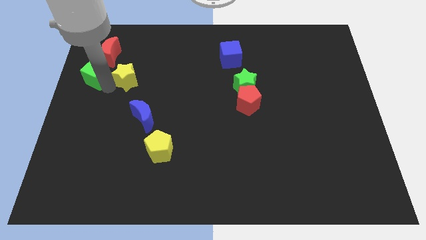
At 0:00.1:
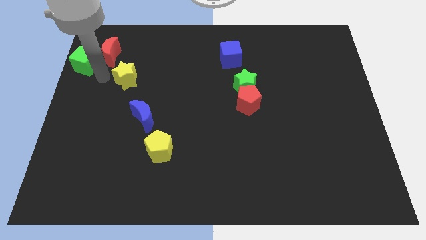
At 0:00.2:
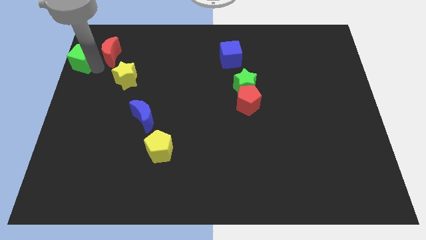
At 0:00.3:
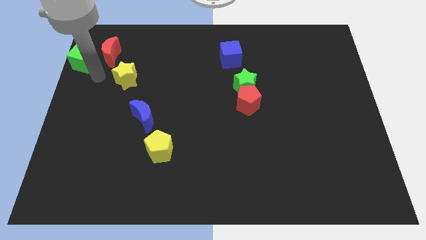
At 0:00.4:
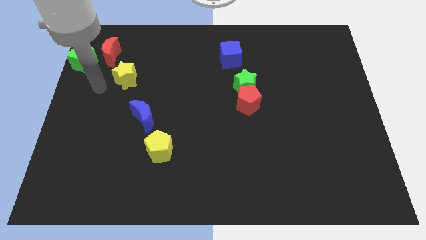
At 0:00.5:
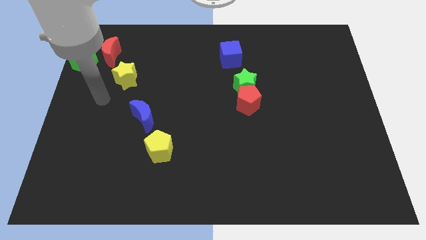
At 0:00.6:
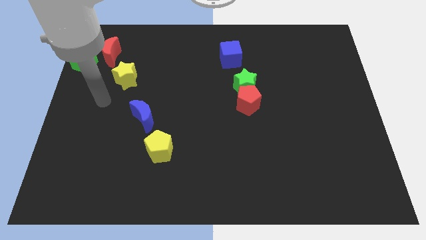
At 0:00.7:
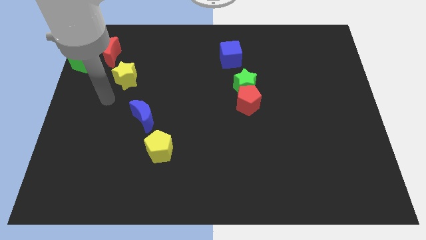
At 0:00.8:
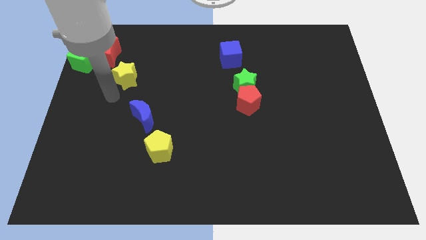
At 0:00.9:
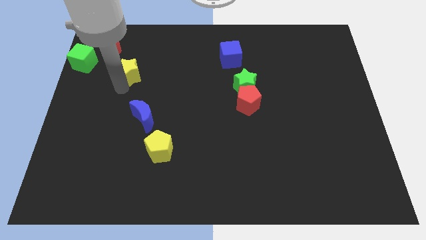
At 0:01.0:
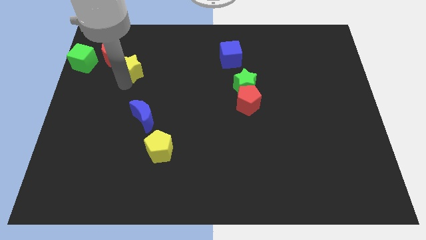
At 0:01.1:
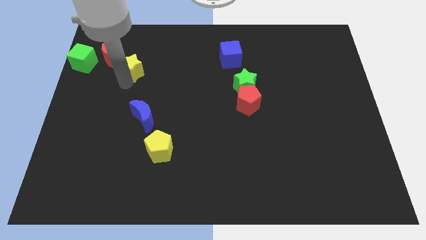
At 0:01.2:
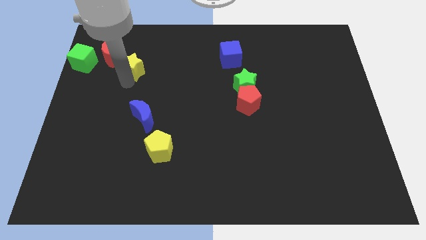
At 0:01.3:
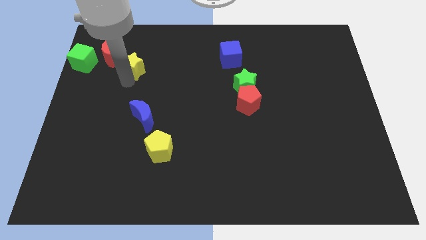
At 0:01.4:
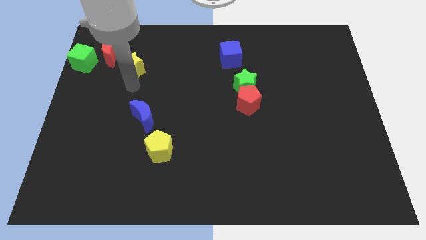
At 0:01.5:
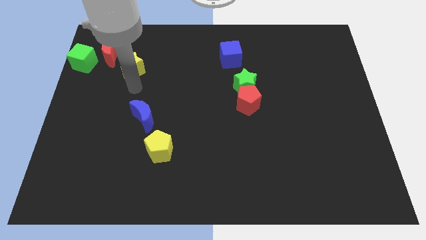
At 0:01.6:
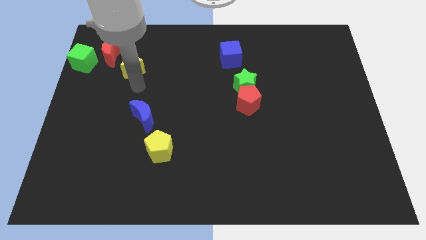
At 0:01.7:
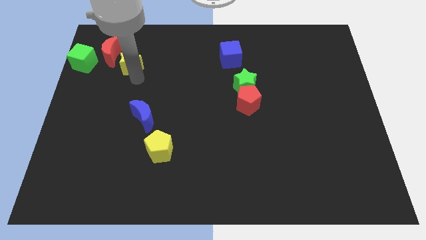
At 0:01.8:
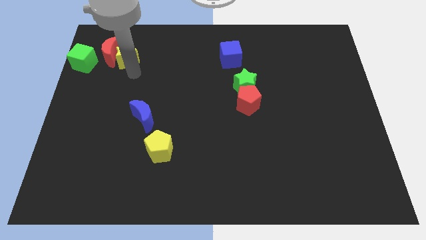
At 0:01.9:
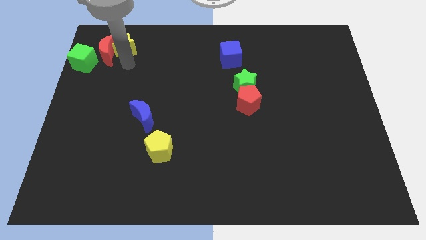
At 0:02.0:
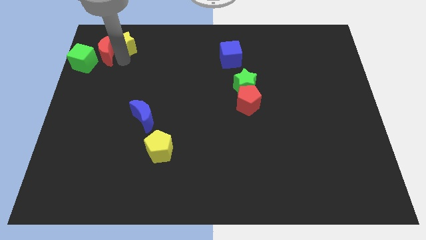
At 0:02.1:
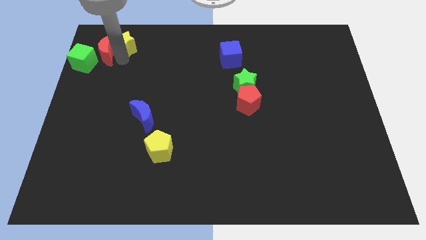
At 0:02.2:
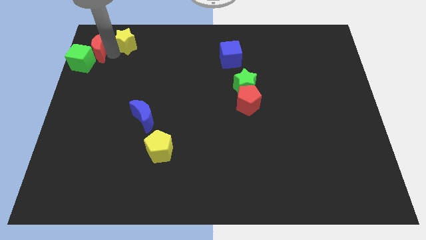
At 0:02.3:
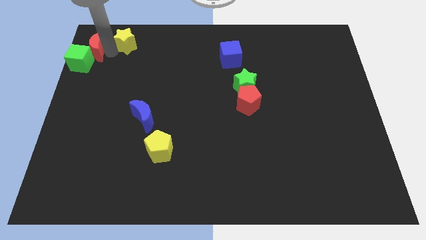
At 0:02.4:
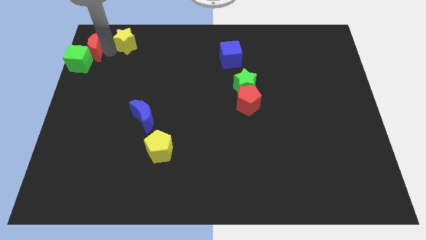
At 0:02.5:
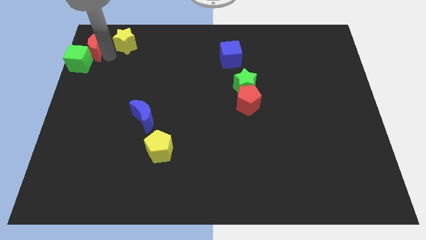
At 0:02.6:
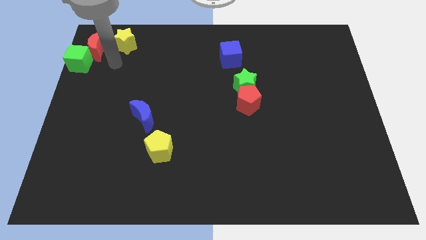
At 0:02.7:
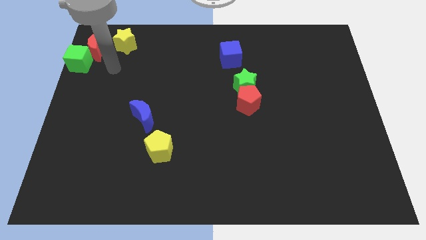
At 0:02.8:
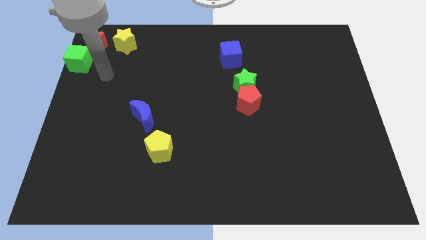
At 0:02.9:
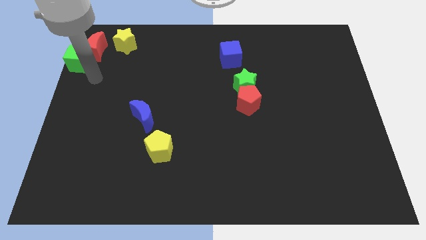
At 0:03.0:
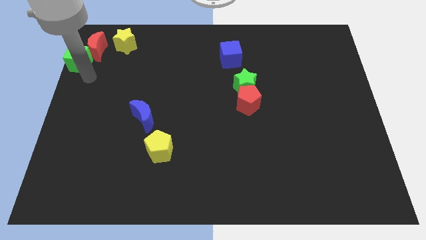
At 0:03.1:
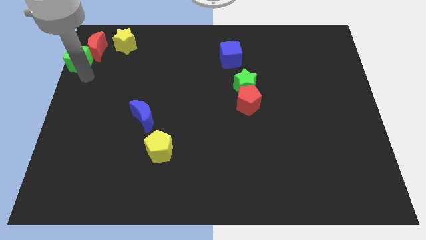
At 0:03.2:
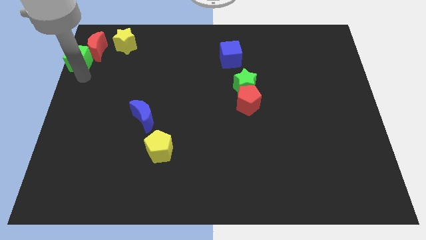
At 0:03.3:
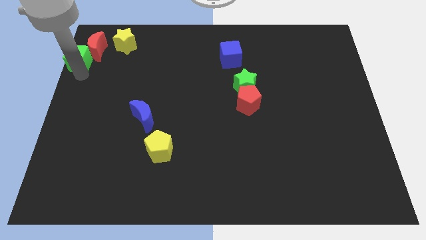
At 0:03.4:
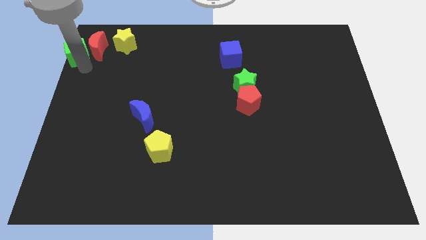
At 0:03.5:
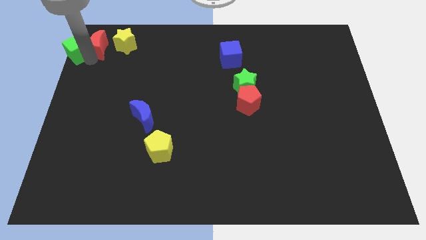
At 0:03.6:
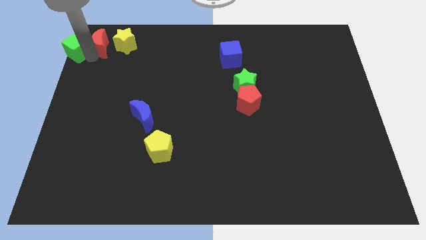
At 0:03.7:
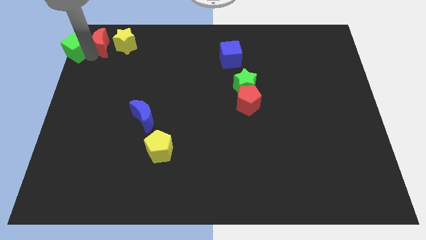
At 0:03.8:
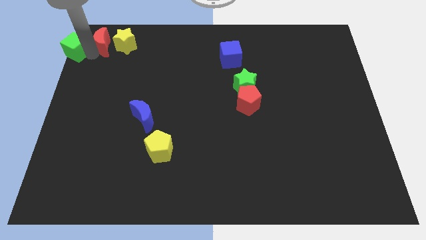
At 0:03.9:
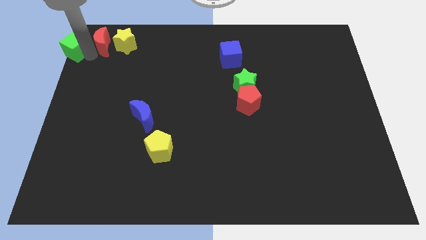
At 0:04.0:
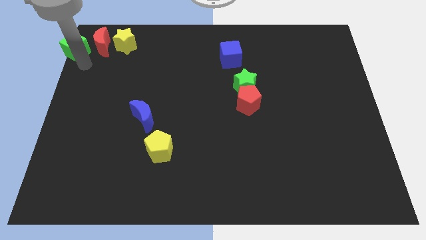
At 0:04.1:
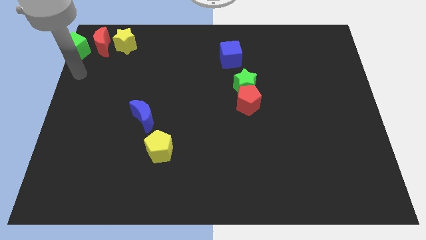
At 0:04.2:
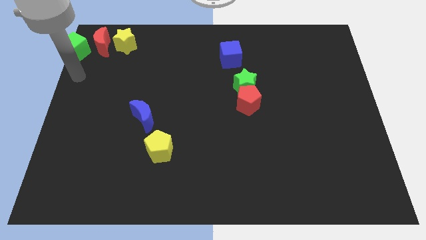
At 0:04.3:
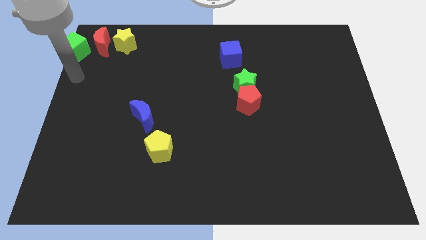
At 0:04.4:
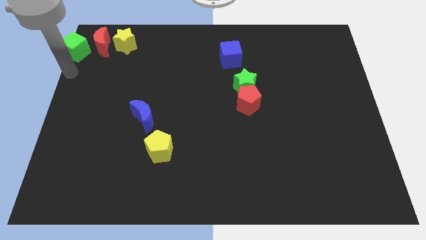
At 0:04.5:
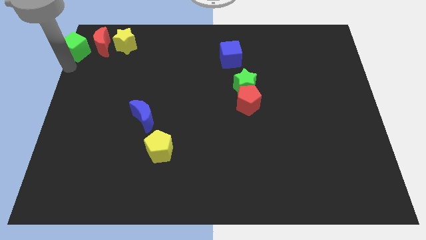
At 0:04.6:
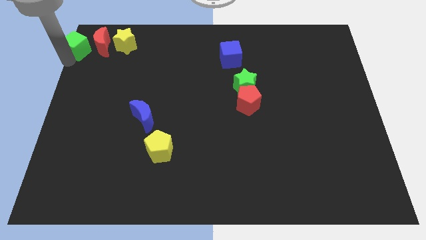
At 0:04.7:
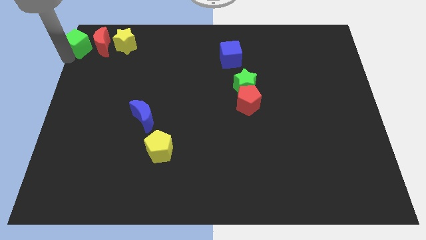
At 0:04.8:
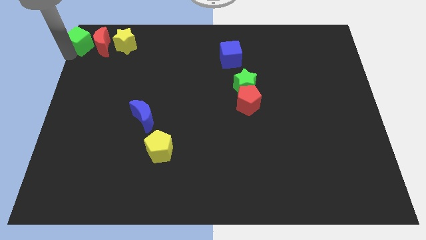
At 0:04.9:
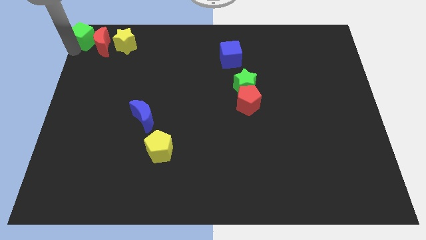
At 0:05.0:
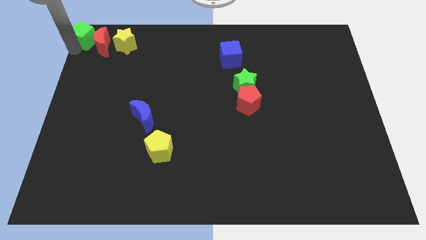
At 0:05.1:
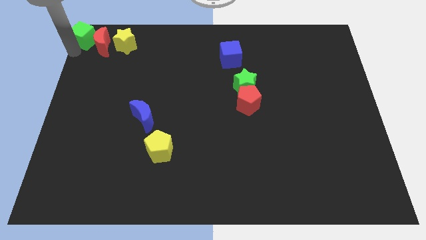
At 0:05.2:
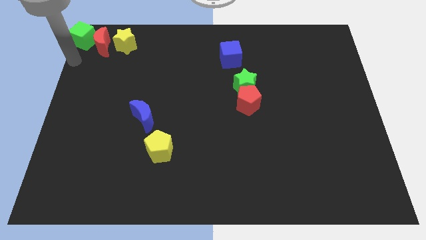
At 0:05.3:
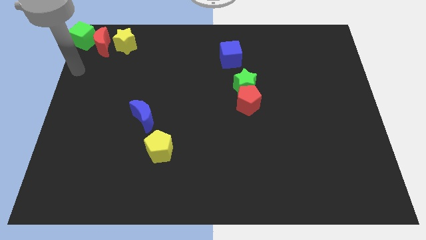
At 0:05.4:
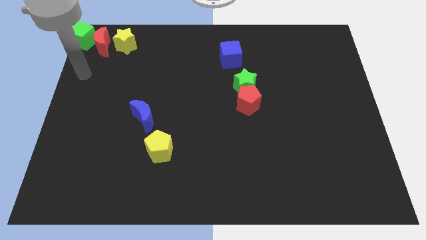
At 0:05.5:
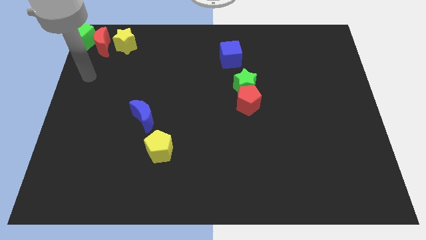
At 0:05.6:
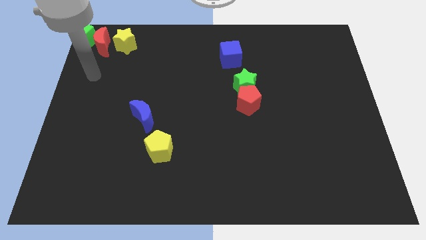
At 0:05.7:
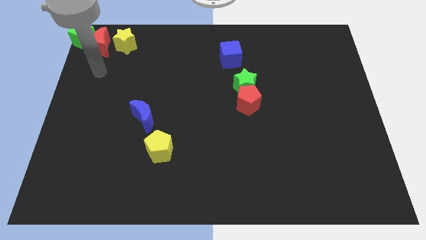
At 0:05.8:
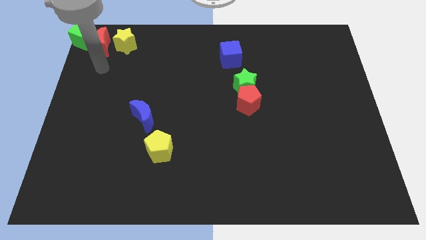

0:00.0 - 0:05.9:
place the green blockred crescent and yellow star at top left side of the board

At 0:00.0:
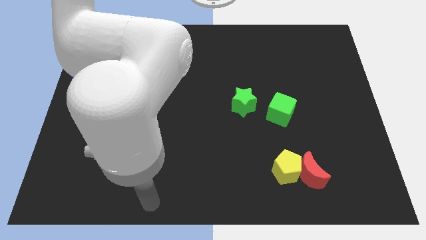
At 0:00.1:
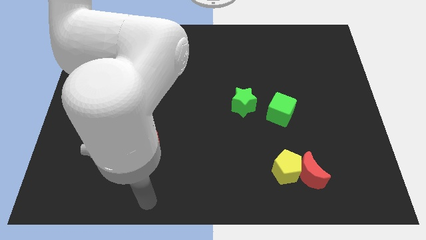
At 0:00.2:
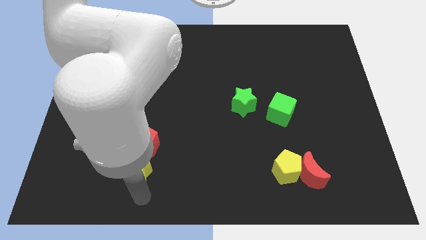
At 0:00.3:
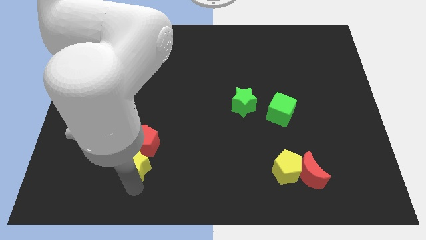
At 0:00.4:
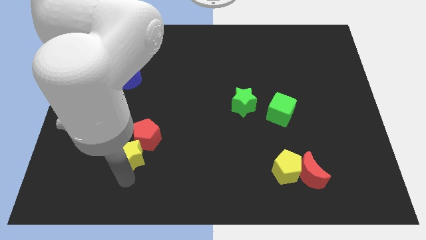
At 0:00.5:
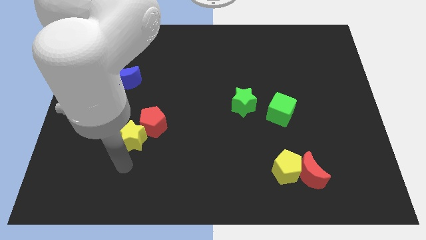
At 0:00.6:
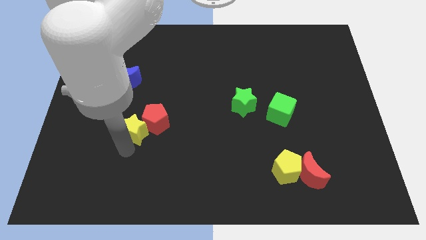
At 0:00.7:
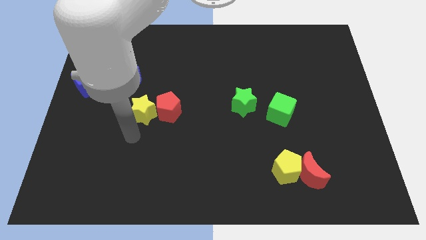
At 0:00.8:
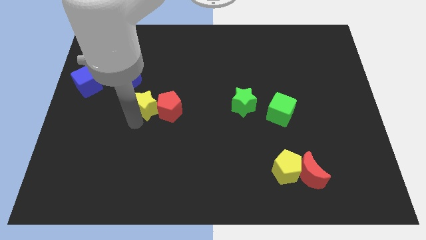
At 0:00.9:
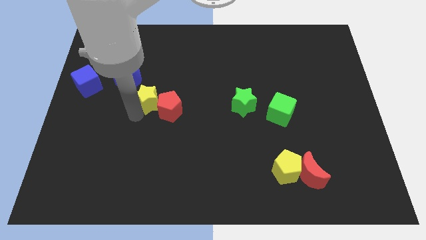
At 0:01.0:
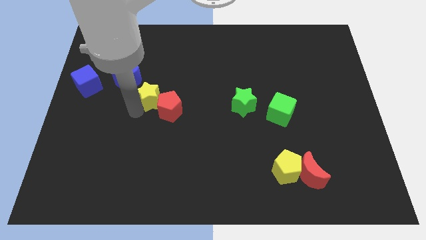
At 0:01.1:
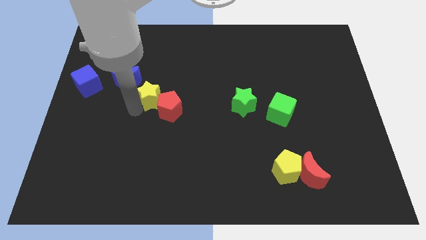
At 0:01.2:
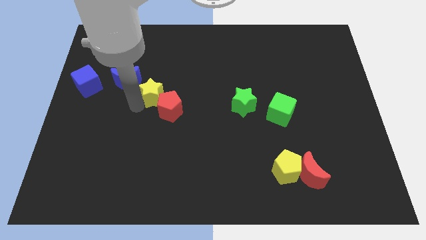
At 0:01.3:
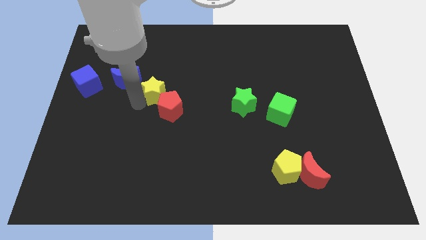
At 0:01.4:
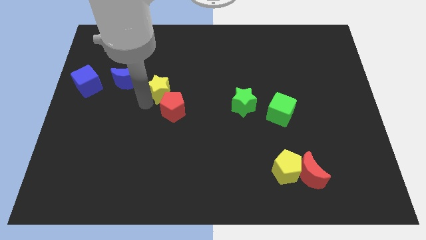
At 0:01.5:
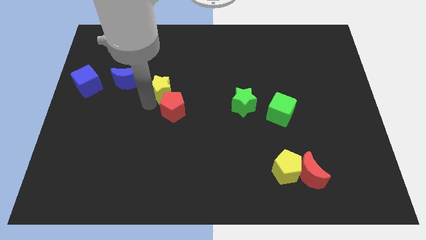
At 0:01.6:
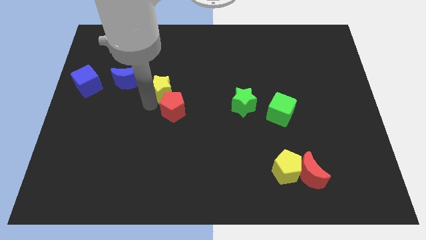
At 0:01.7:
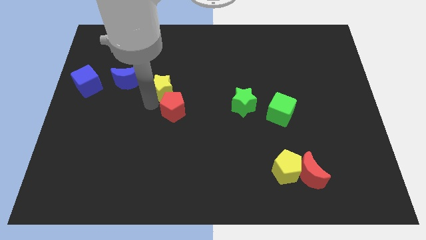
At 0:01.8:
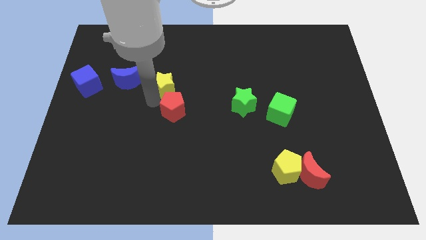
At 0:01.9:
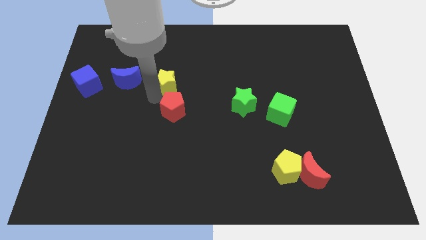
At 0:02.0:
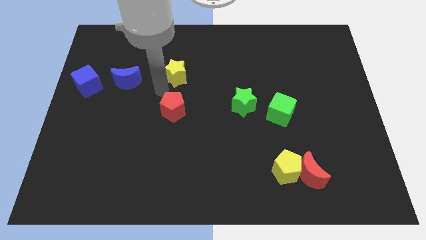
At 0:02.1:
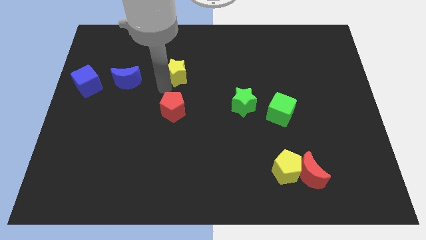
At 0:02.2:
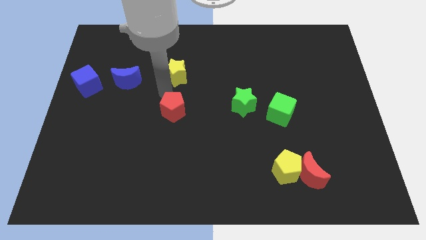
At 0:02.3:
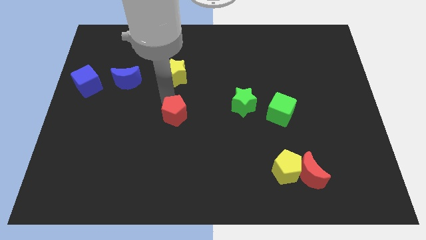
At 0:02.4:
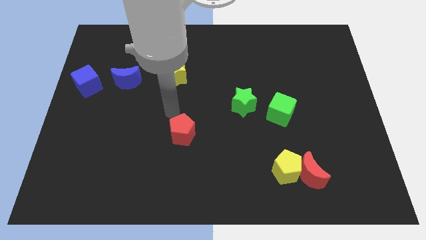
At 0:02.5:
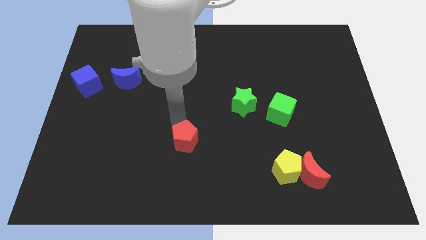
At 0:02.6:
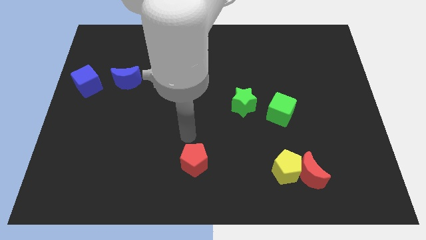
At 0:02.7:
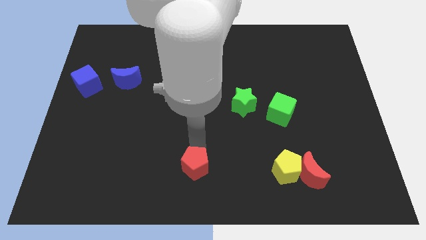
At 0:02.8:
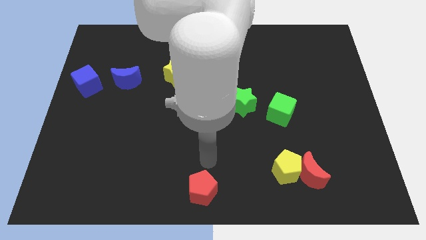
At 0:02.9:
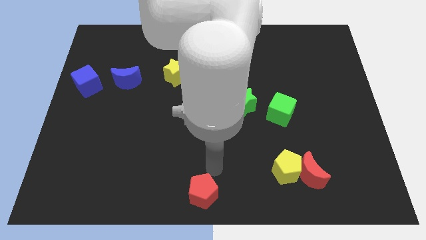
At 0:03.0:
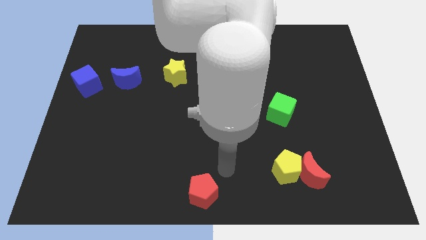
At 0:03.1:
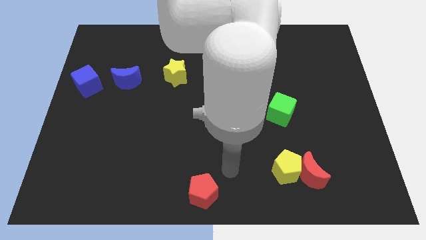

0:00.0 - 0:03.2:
place the red pentagon to the bottom middle of the board
